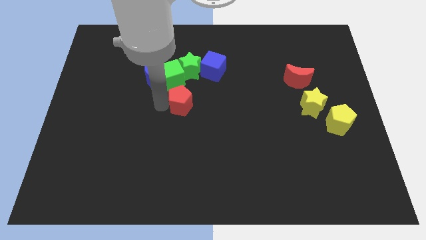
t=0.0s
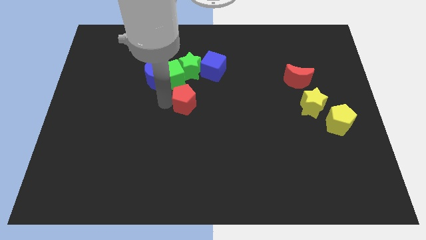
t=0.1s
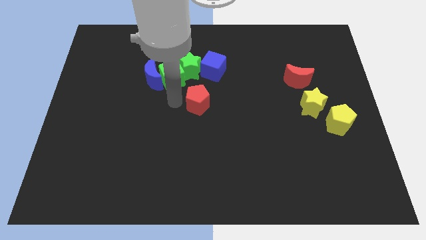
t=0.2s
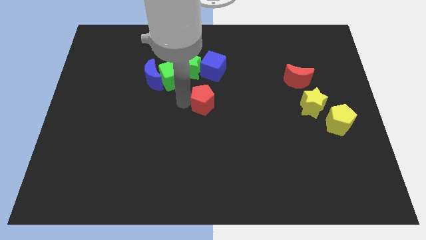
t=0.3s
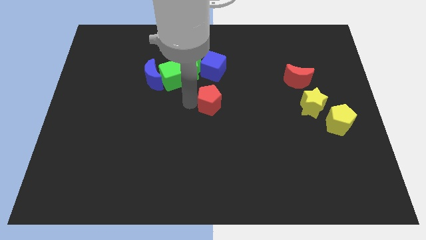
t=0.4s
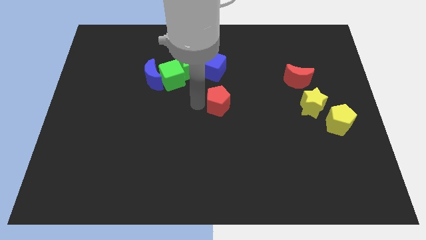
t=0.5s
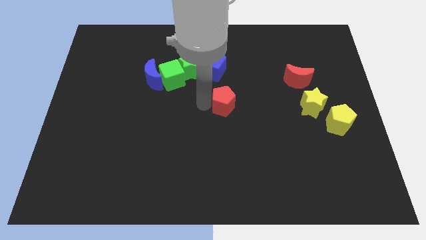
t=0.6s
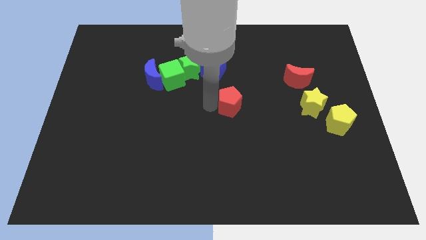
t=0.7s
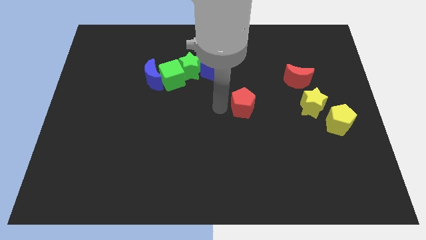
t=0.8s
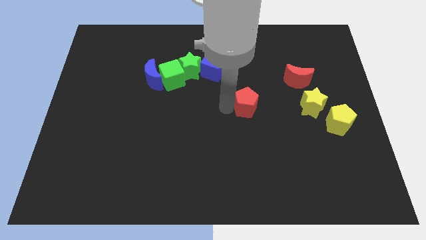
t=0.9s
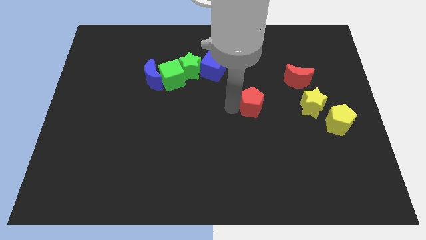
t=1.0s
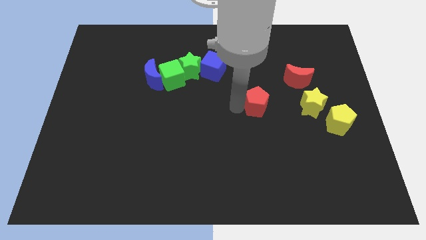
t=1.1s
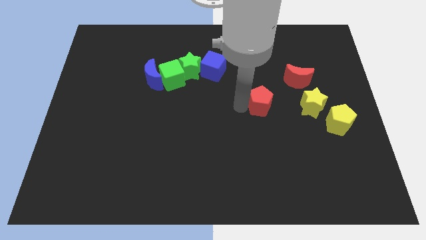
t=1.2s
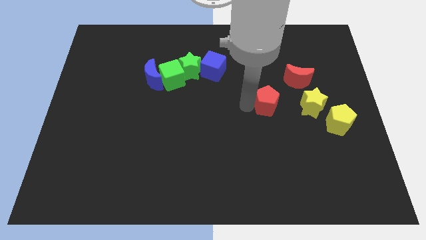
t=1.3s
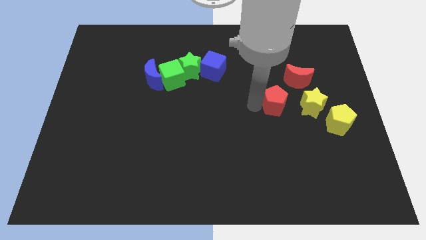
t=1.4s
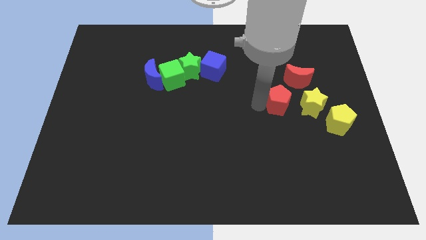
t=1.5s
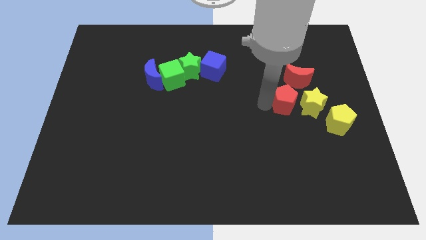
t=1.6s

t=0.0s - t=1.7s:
move red pentagon parallel to yellow star

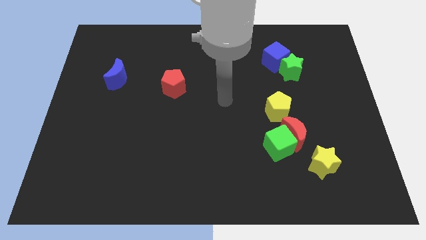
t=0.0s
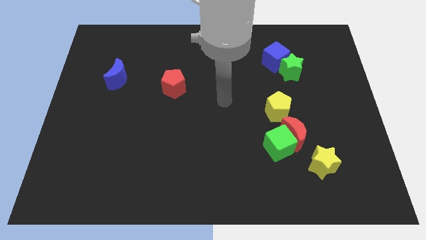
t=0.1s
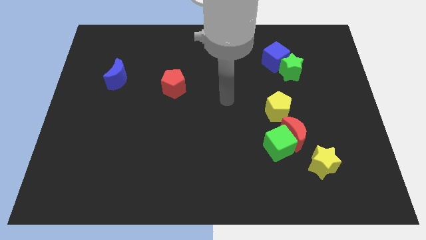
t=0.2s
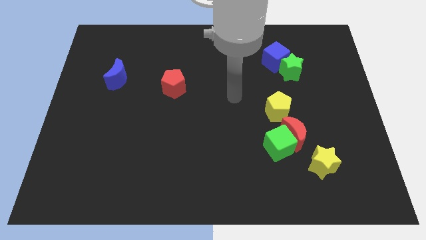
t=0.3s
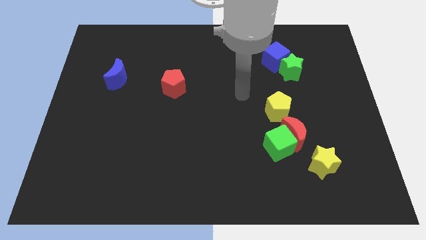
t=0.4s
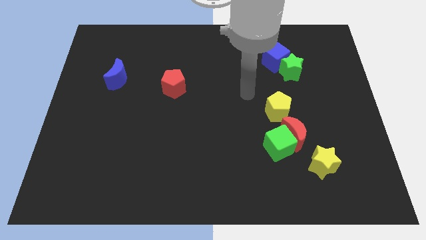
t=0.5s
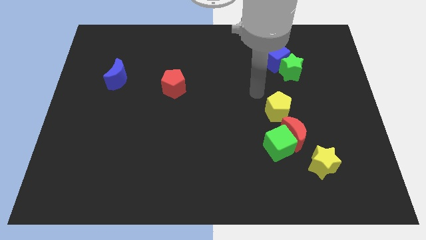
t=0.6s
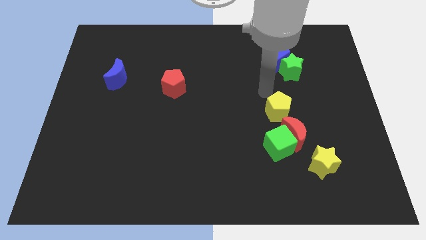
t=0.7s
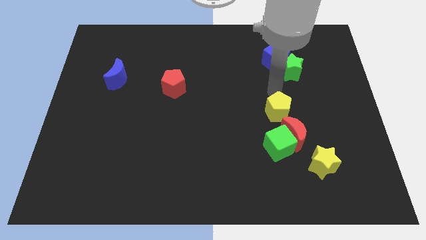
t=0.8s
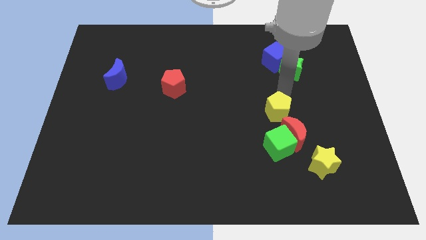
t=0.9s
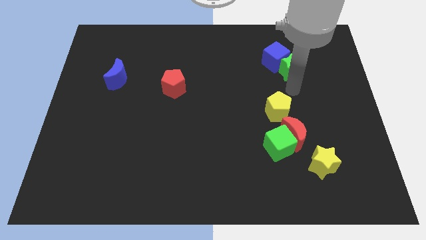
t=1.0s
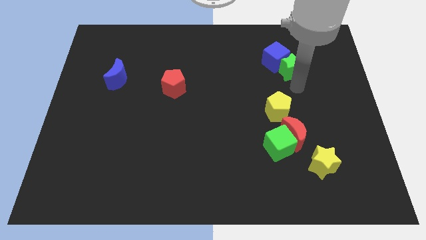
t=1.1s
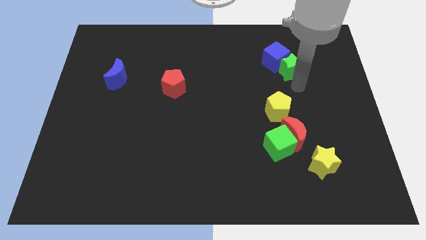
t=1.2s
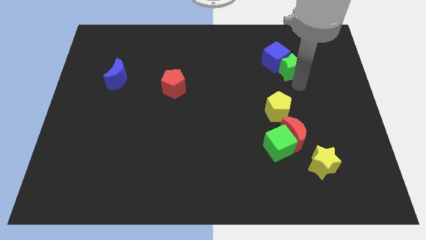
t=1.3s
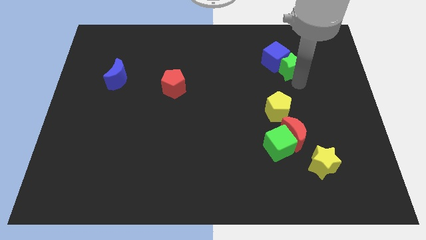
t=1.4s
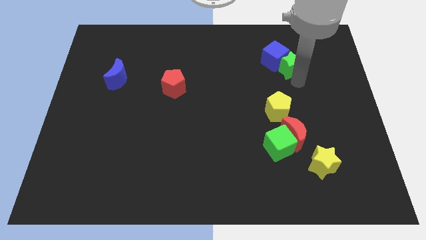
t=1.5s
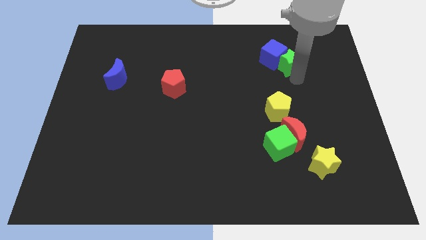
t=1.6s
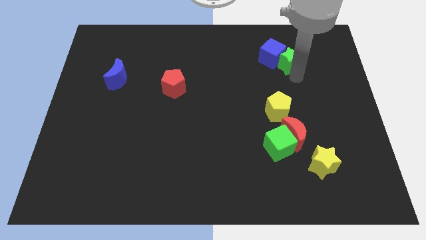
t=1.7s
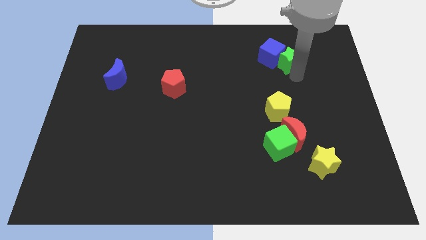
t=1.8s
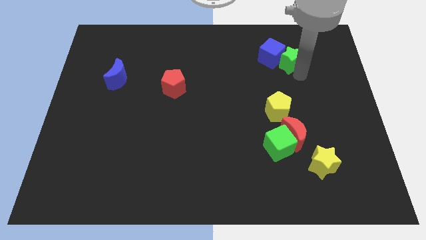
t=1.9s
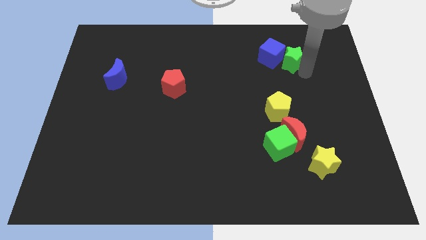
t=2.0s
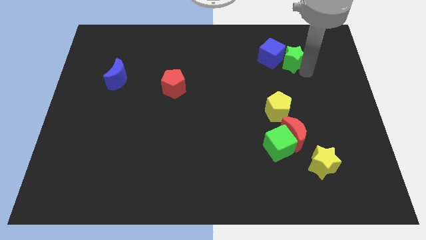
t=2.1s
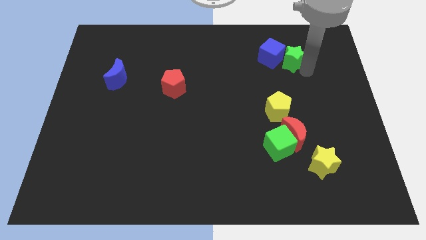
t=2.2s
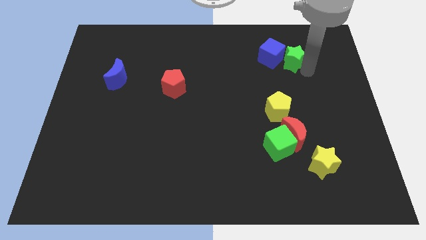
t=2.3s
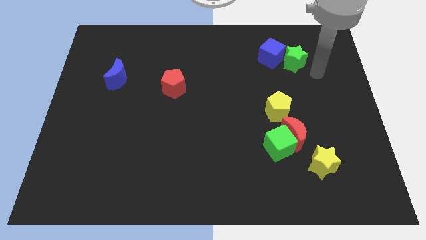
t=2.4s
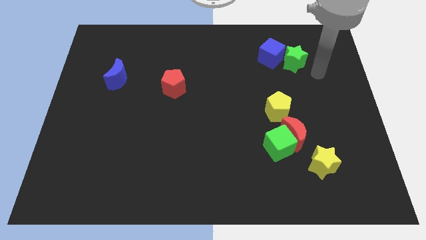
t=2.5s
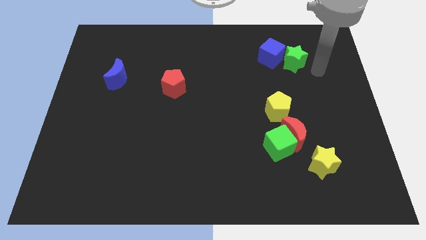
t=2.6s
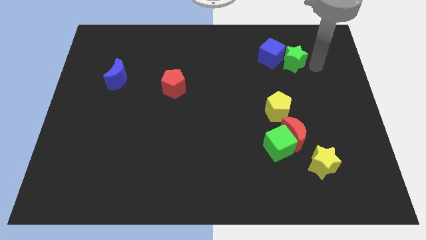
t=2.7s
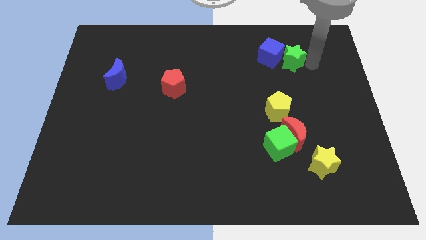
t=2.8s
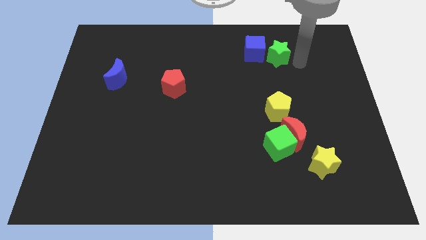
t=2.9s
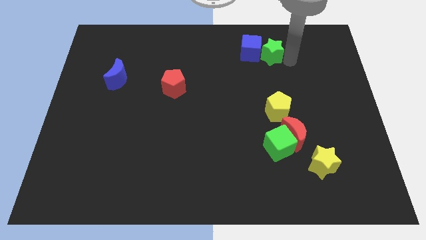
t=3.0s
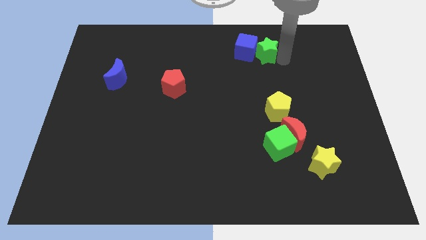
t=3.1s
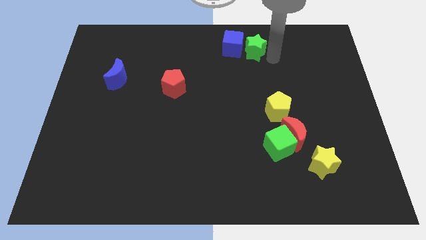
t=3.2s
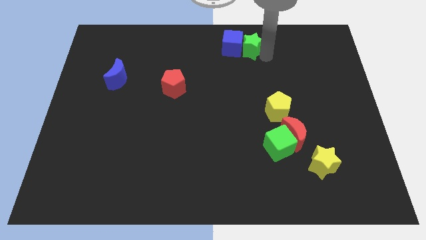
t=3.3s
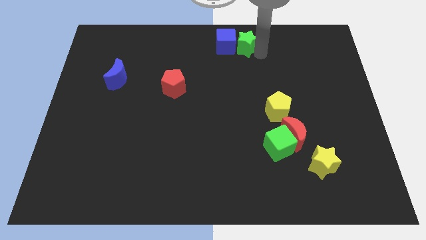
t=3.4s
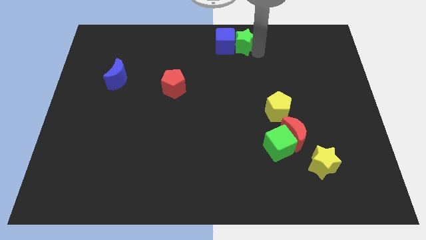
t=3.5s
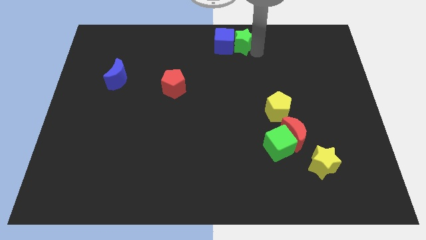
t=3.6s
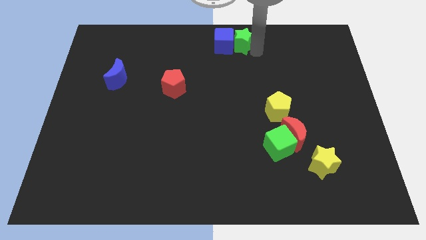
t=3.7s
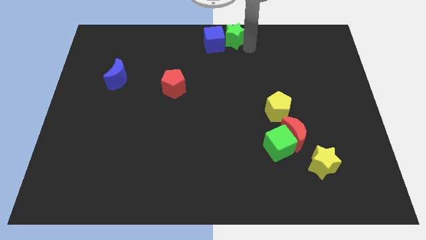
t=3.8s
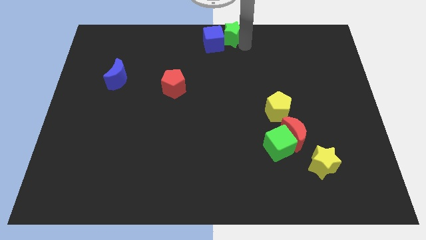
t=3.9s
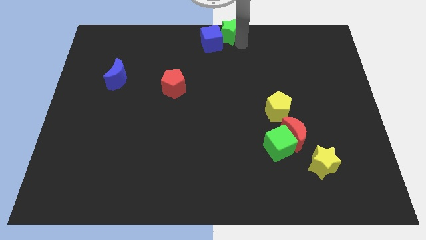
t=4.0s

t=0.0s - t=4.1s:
place the blue cube along with green star at top center of the board

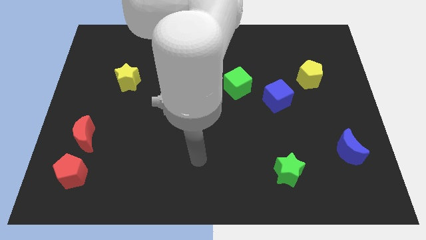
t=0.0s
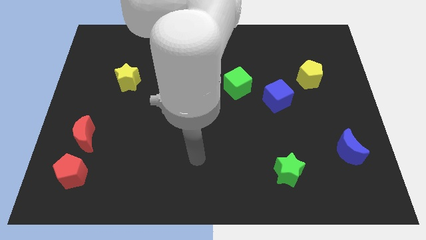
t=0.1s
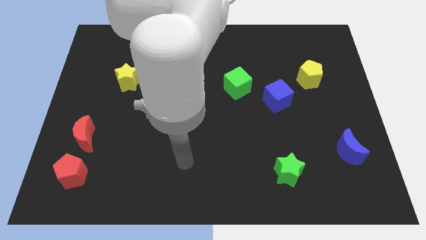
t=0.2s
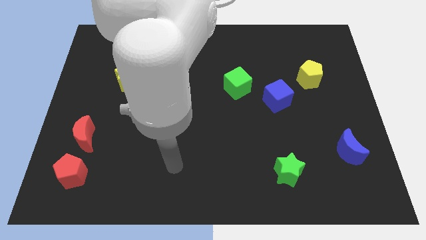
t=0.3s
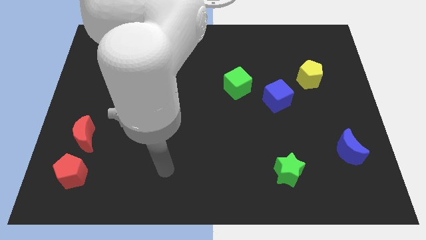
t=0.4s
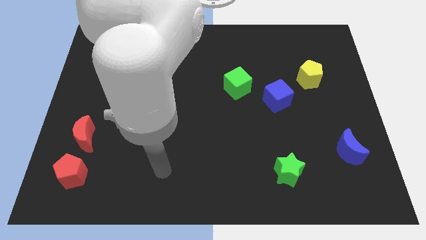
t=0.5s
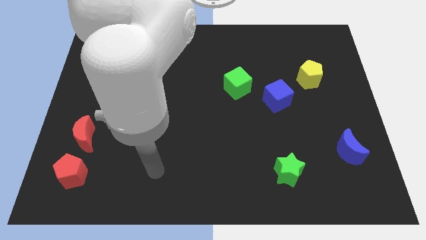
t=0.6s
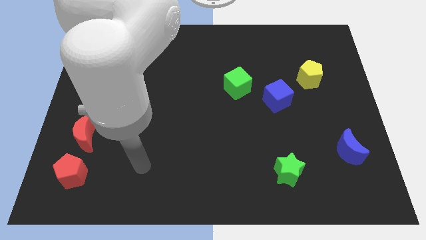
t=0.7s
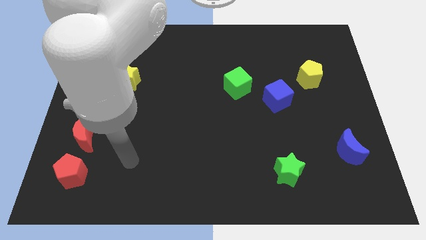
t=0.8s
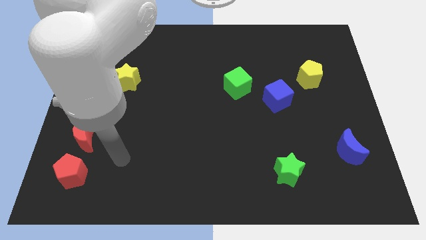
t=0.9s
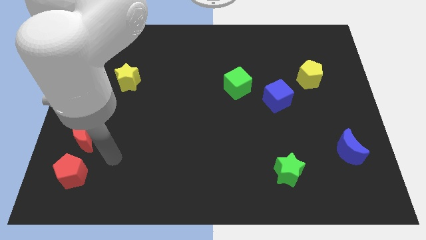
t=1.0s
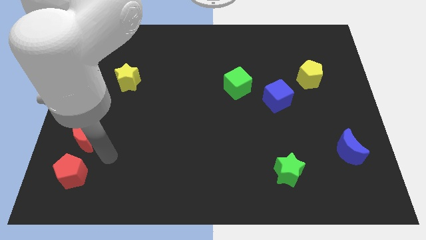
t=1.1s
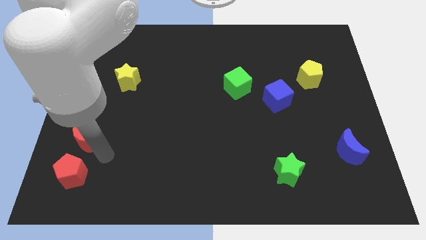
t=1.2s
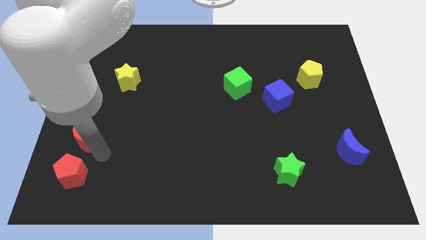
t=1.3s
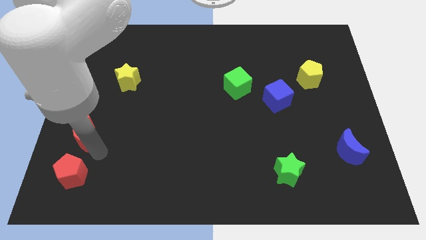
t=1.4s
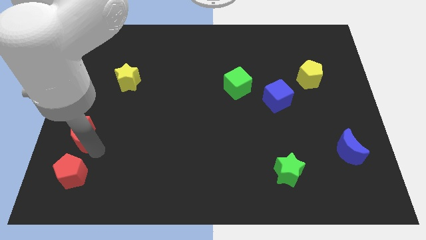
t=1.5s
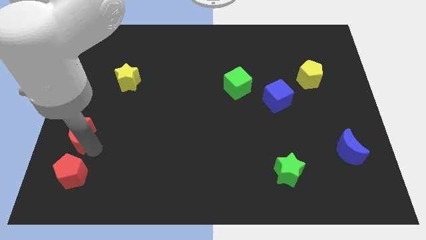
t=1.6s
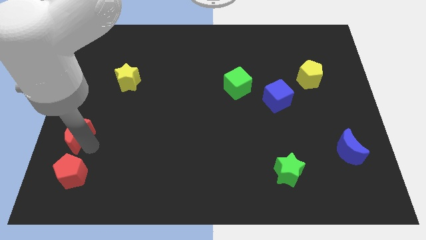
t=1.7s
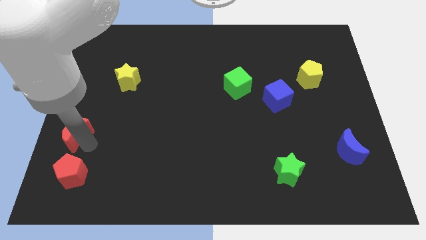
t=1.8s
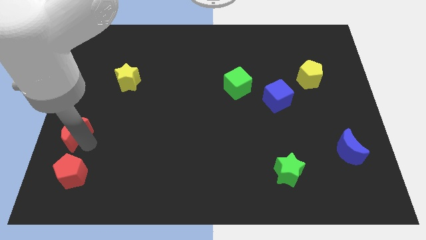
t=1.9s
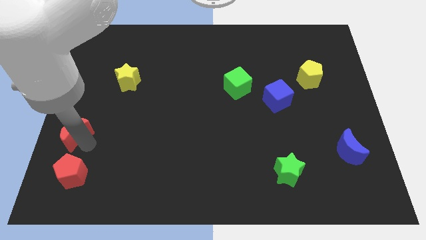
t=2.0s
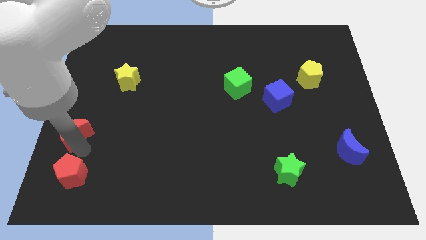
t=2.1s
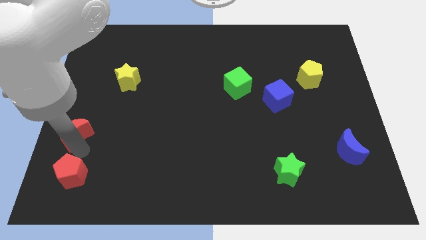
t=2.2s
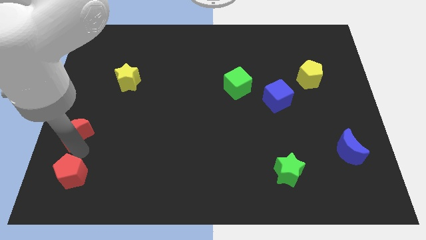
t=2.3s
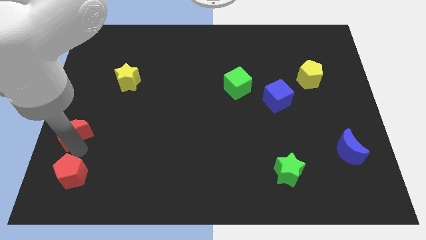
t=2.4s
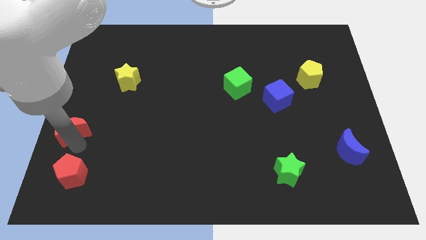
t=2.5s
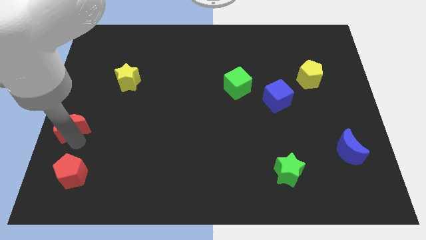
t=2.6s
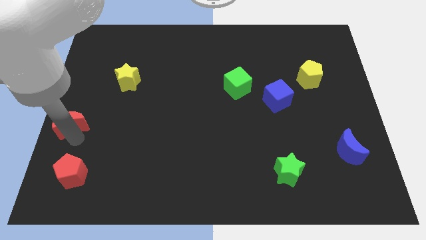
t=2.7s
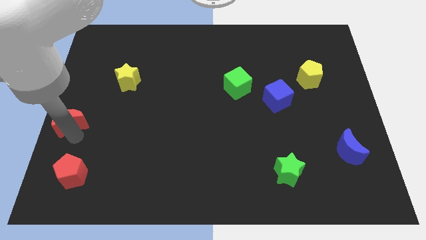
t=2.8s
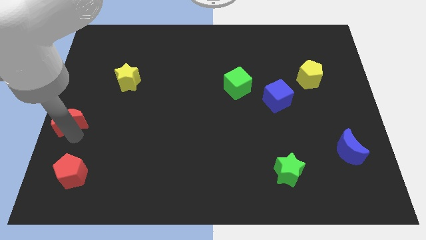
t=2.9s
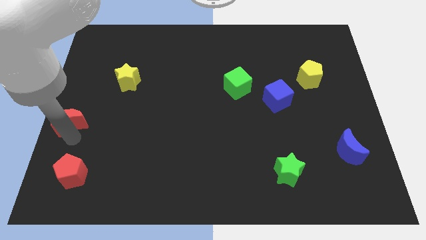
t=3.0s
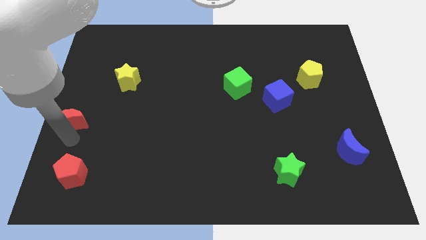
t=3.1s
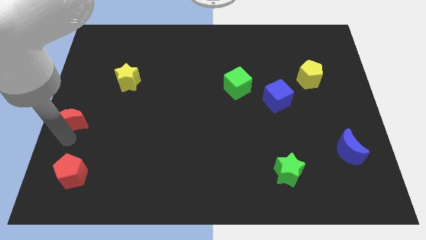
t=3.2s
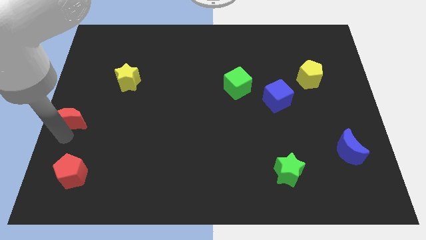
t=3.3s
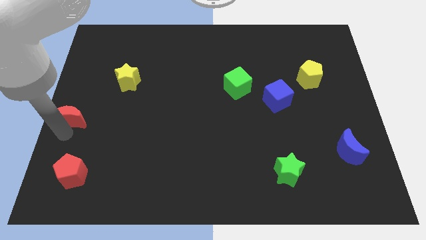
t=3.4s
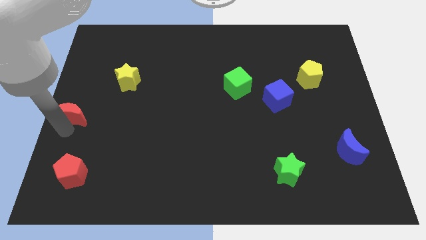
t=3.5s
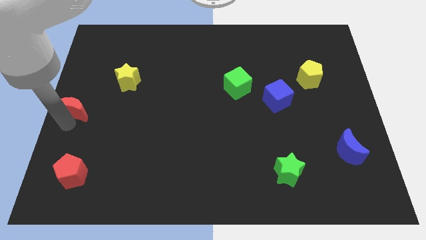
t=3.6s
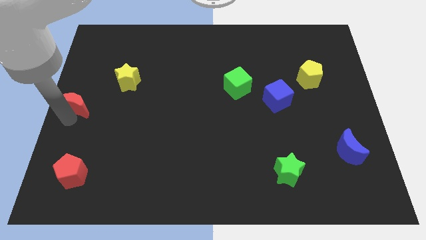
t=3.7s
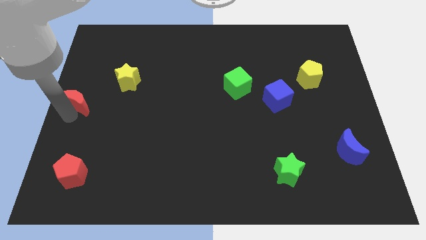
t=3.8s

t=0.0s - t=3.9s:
move the red moon slightly towards the top
